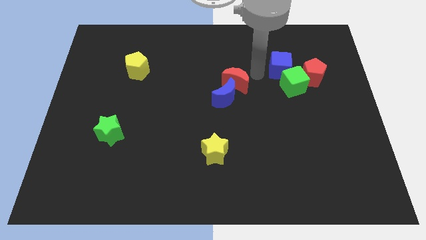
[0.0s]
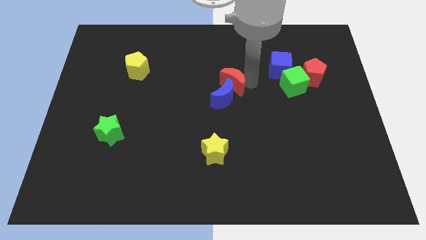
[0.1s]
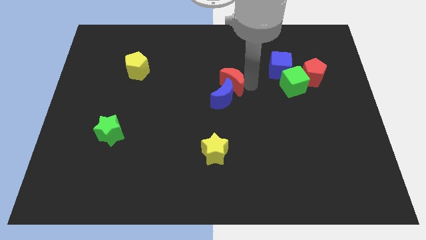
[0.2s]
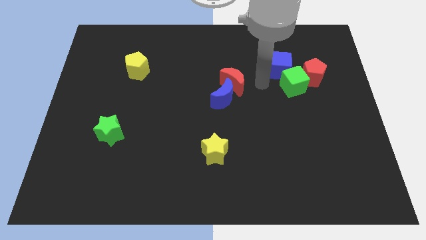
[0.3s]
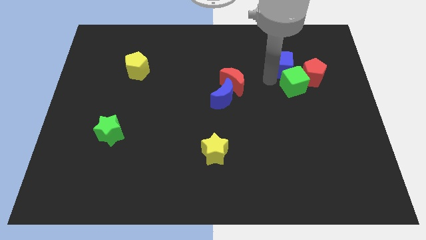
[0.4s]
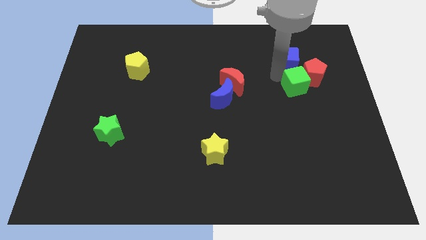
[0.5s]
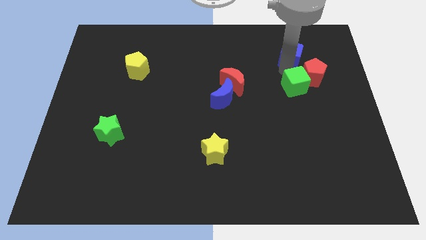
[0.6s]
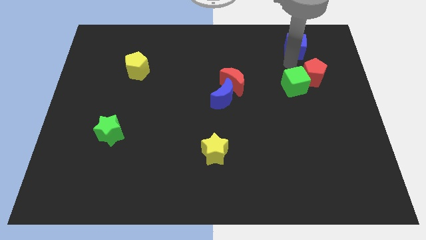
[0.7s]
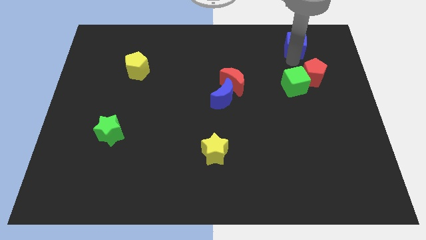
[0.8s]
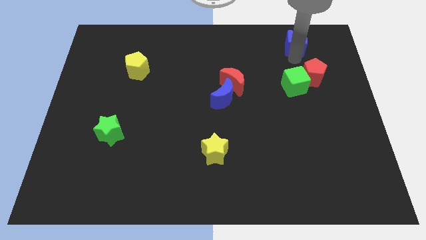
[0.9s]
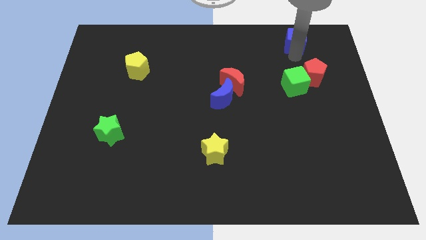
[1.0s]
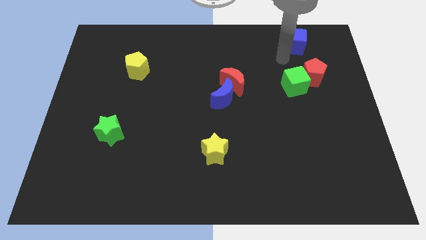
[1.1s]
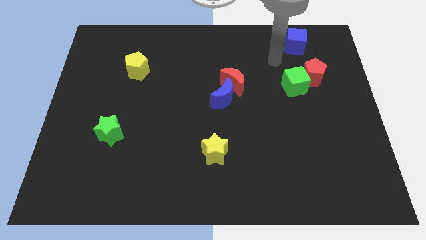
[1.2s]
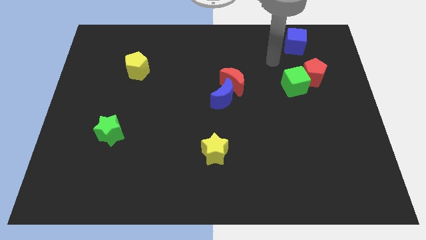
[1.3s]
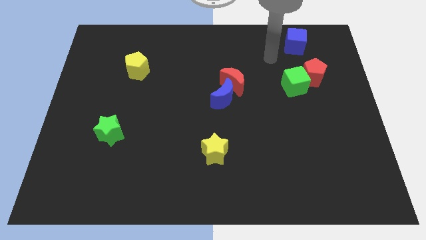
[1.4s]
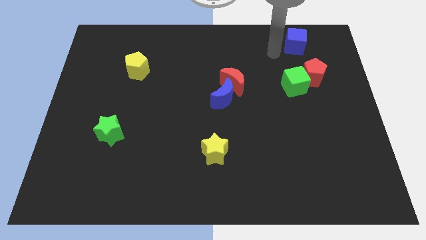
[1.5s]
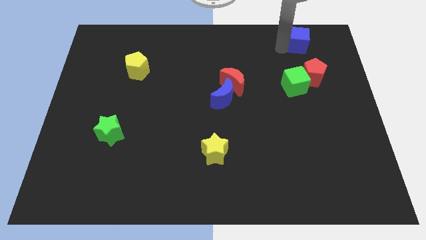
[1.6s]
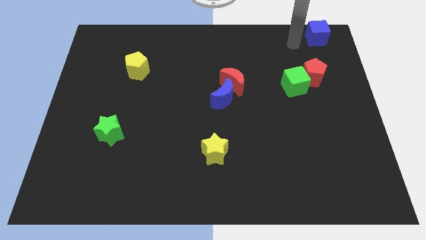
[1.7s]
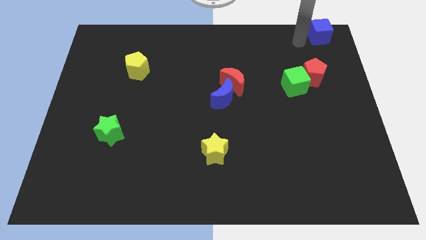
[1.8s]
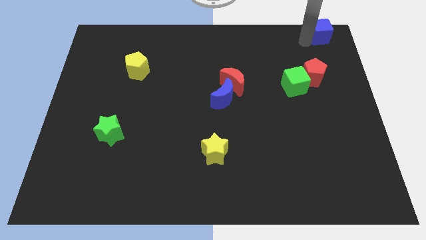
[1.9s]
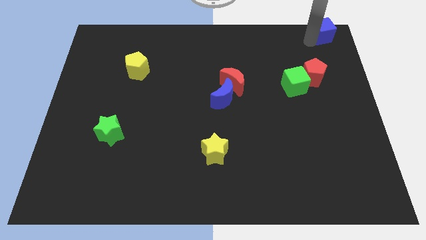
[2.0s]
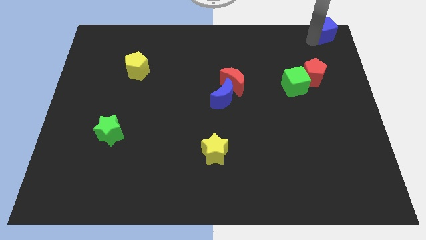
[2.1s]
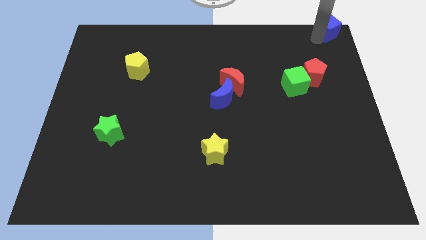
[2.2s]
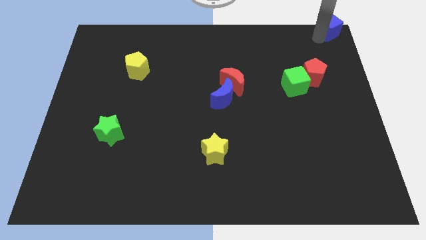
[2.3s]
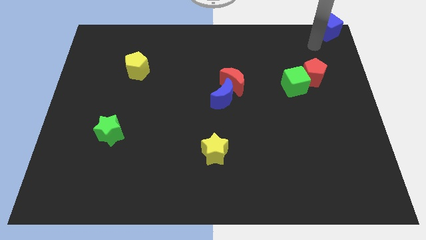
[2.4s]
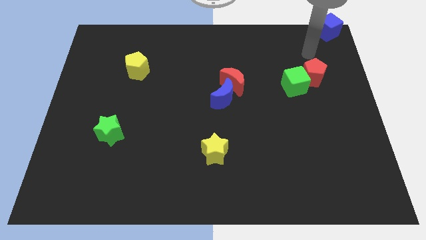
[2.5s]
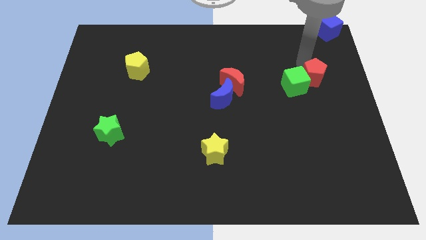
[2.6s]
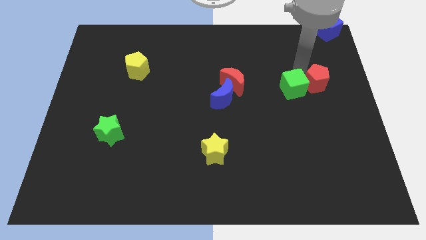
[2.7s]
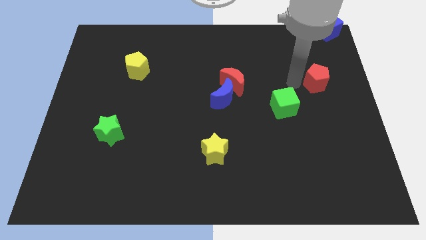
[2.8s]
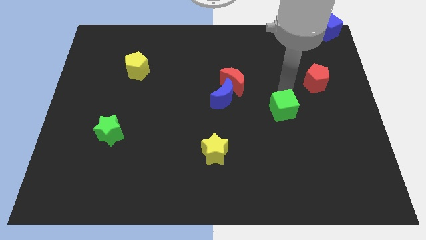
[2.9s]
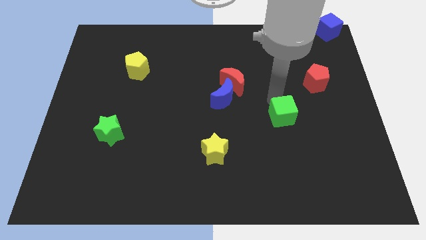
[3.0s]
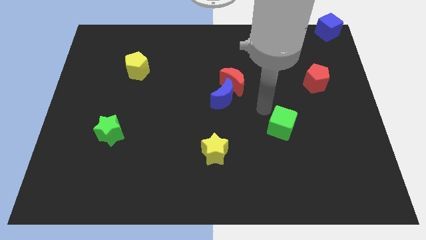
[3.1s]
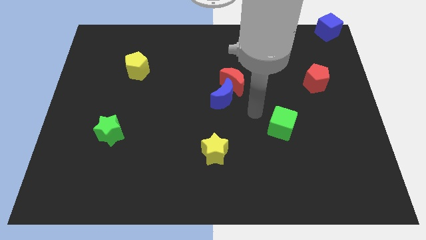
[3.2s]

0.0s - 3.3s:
move both blue and green cubes diagonal to each other

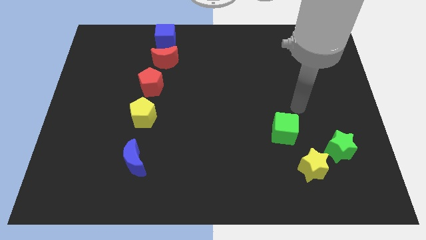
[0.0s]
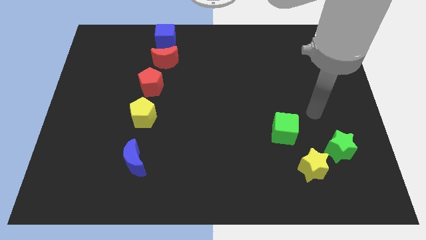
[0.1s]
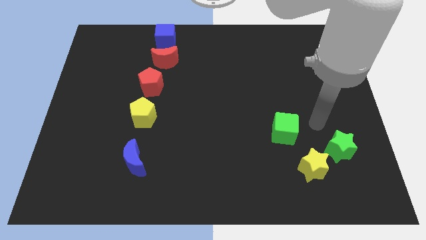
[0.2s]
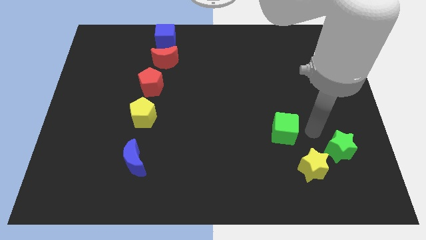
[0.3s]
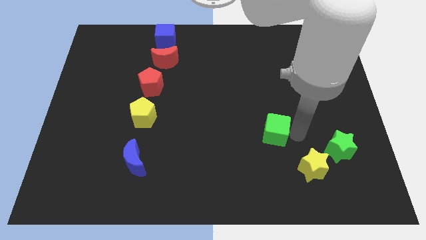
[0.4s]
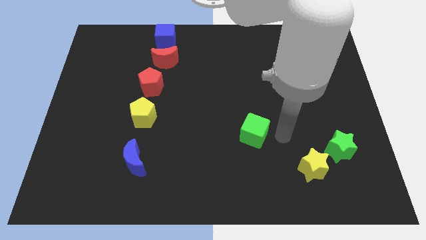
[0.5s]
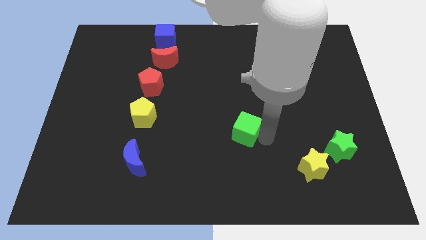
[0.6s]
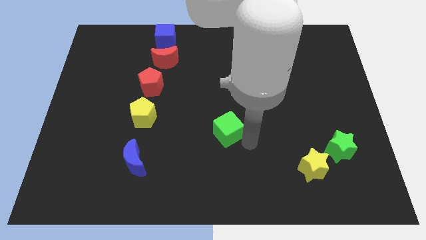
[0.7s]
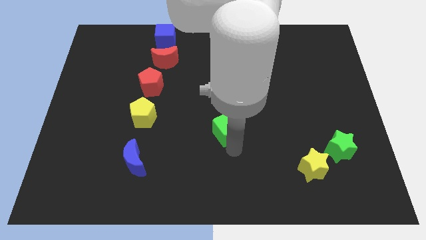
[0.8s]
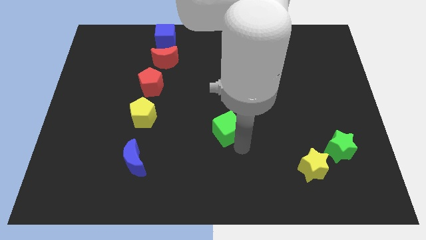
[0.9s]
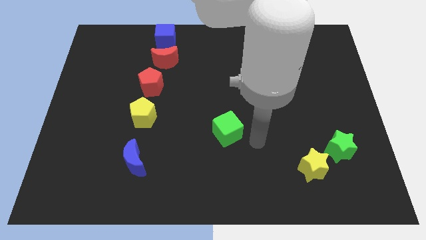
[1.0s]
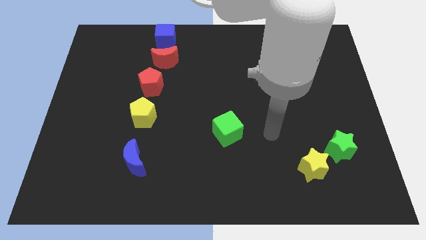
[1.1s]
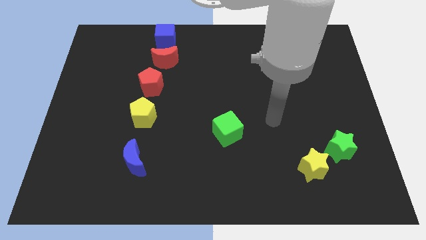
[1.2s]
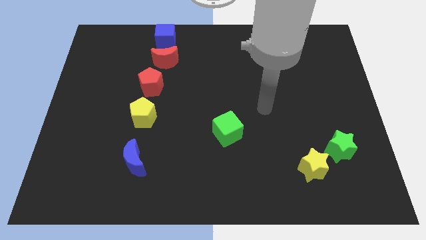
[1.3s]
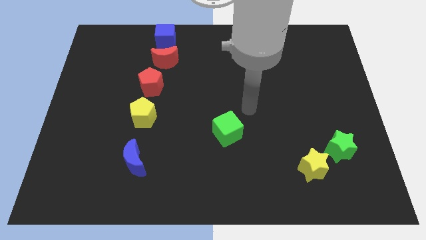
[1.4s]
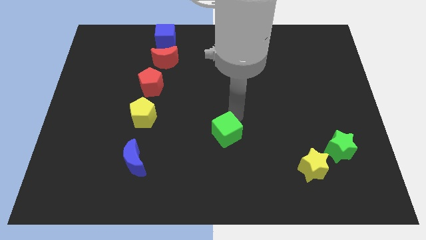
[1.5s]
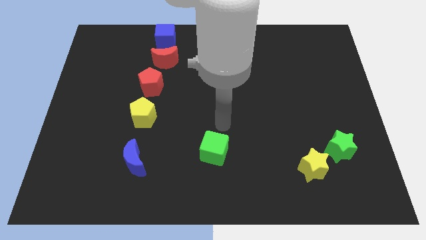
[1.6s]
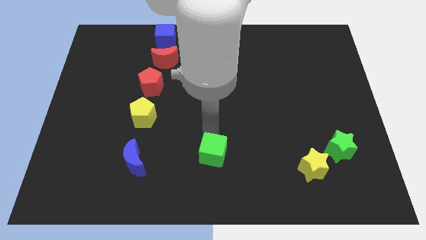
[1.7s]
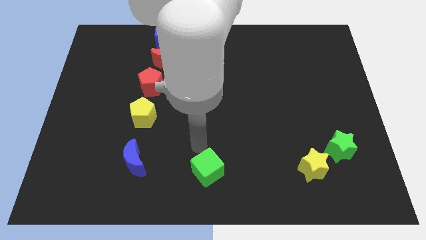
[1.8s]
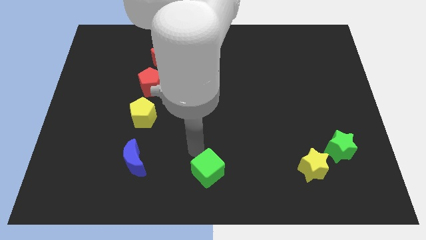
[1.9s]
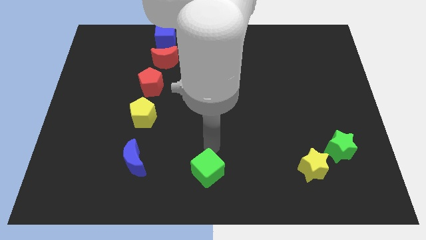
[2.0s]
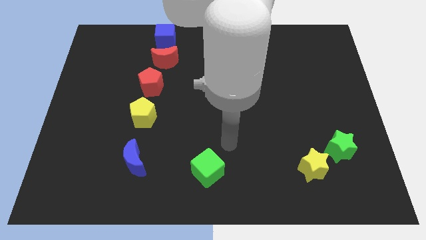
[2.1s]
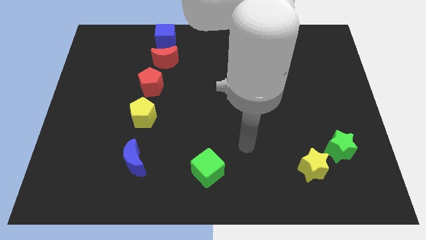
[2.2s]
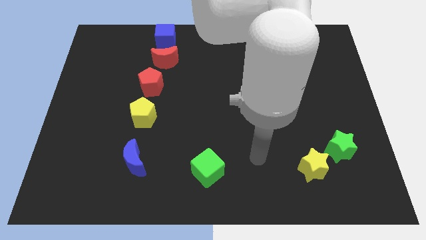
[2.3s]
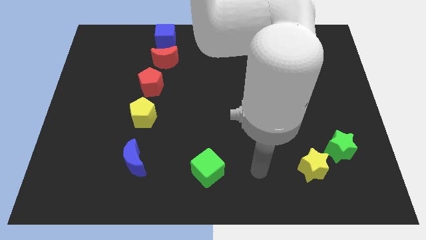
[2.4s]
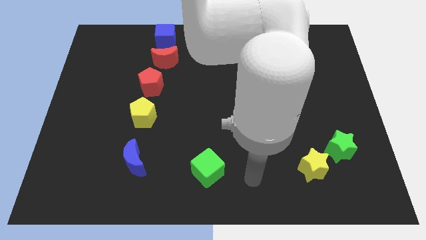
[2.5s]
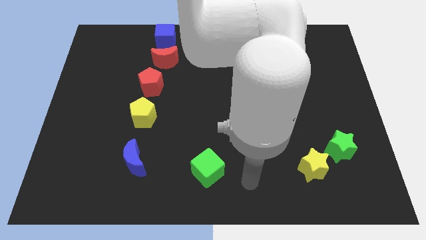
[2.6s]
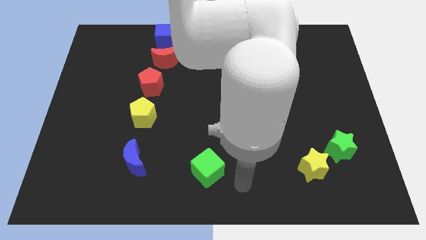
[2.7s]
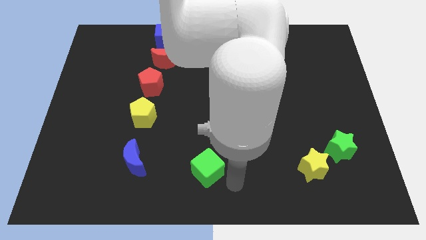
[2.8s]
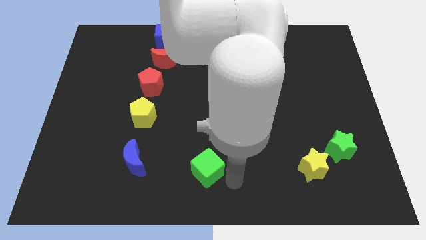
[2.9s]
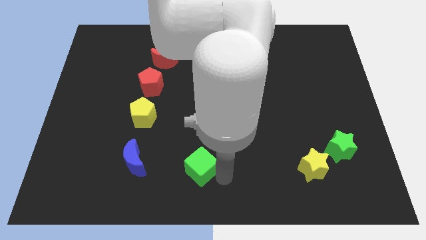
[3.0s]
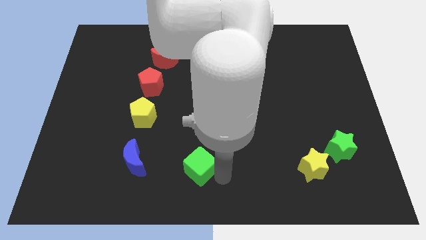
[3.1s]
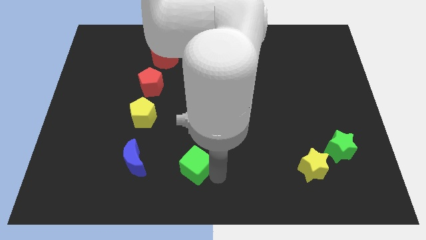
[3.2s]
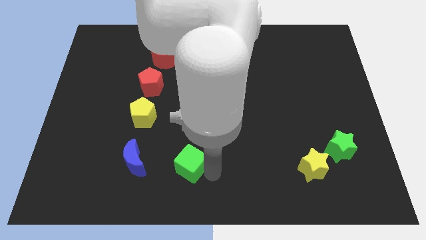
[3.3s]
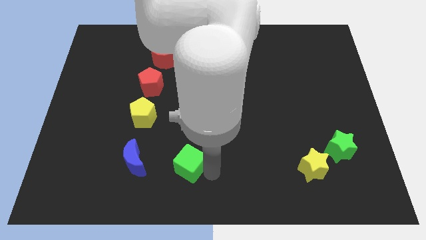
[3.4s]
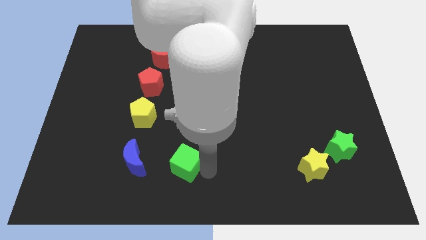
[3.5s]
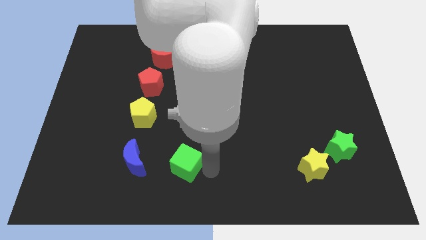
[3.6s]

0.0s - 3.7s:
slide the green cube downward

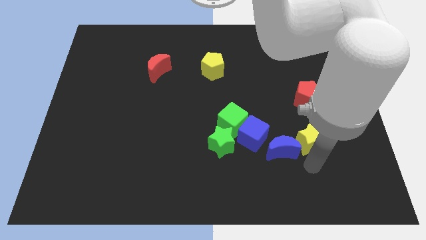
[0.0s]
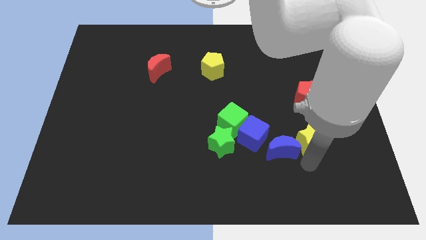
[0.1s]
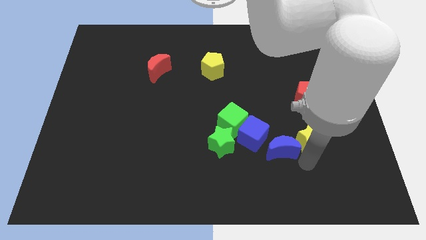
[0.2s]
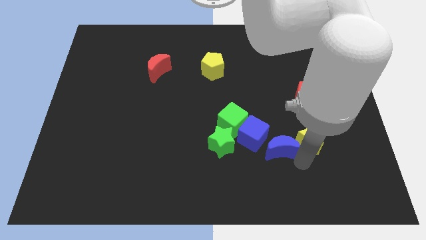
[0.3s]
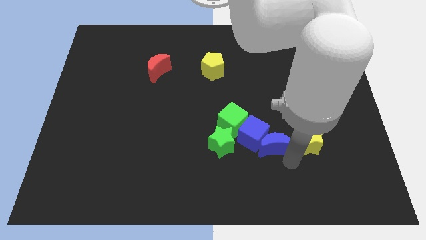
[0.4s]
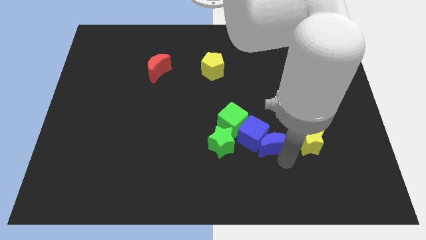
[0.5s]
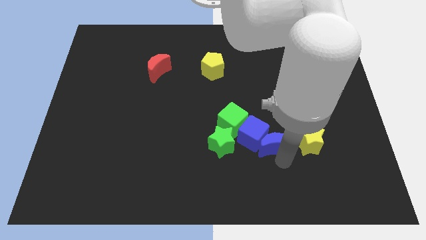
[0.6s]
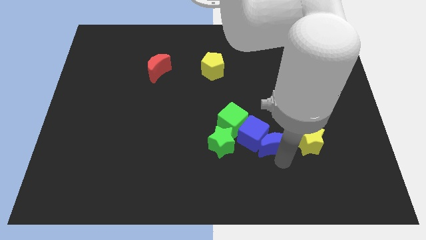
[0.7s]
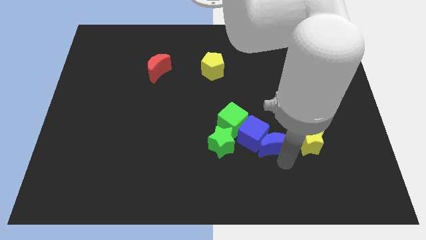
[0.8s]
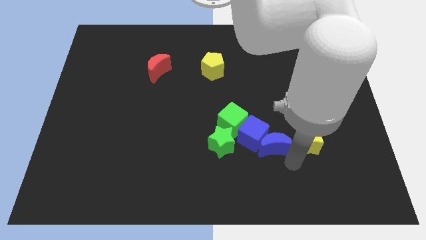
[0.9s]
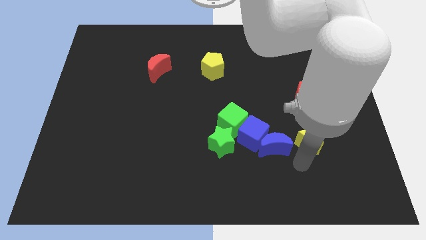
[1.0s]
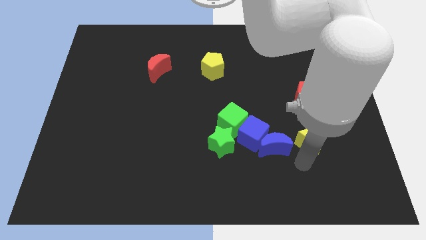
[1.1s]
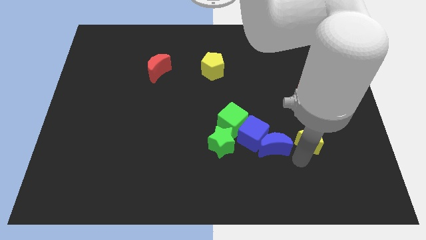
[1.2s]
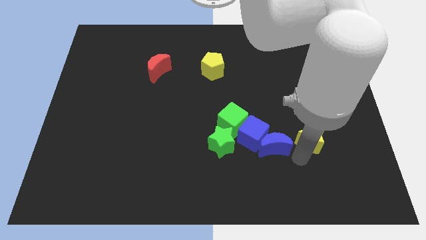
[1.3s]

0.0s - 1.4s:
push the blue moon into the blue cube

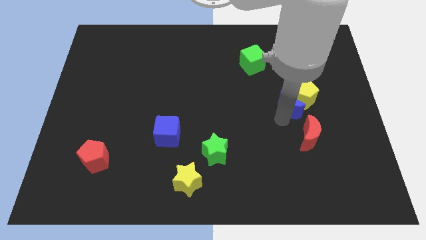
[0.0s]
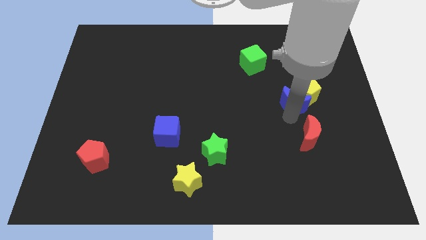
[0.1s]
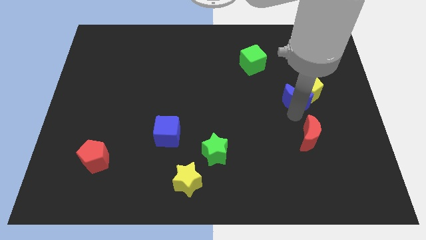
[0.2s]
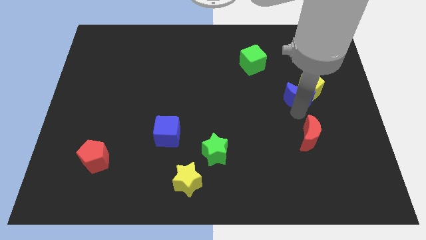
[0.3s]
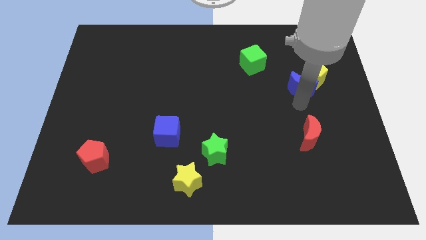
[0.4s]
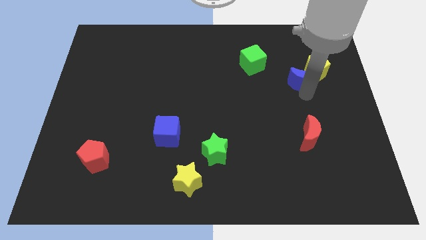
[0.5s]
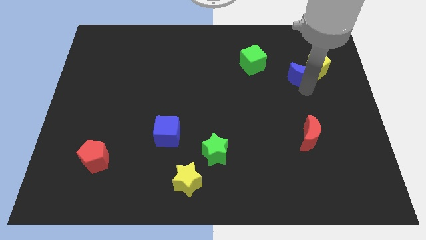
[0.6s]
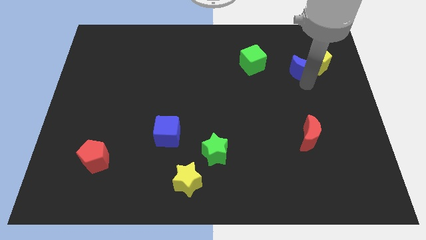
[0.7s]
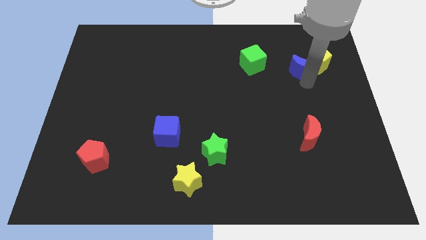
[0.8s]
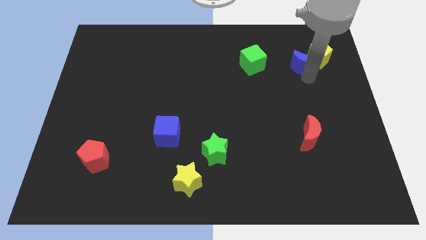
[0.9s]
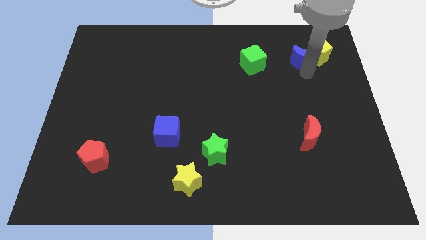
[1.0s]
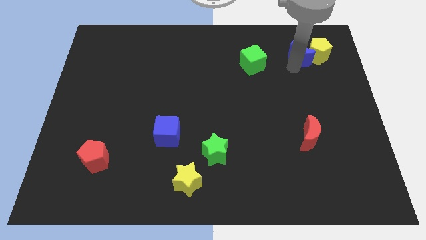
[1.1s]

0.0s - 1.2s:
slide the blue moon and the yellow pentagon towards the top right
